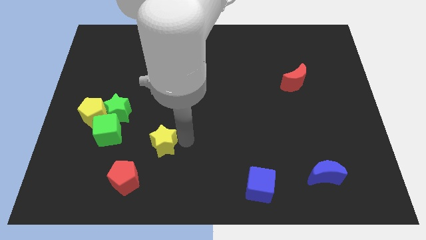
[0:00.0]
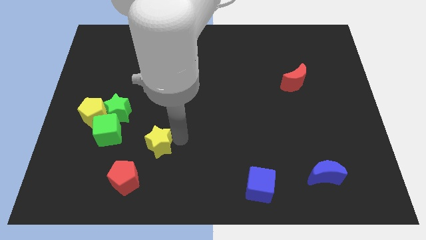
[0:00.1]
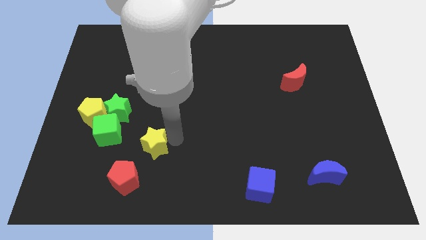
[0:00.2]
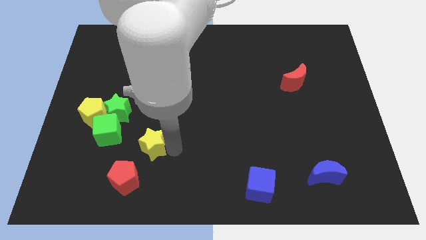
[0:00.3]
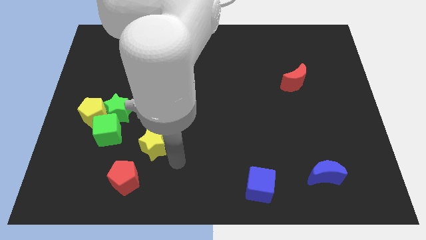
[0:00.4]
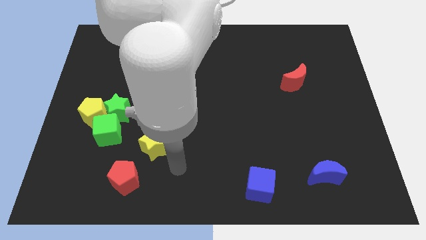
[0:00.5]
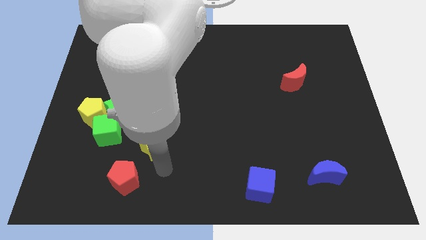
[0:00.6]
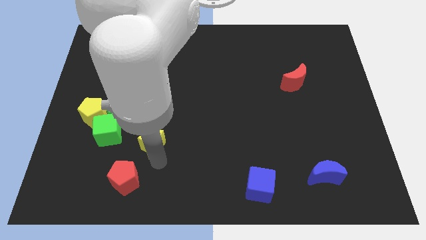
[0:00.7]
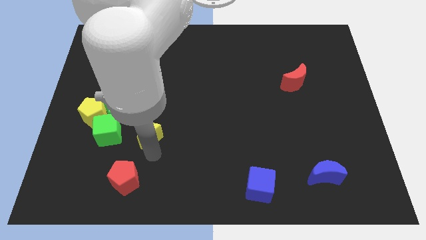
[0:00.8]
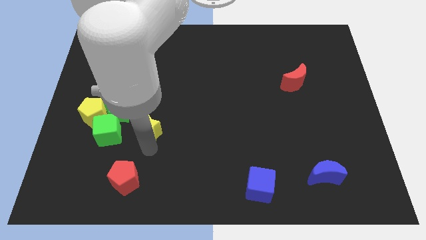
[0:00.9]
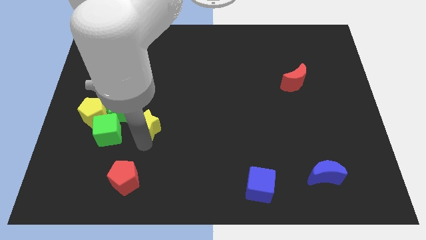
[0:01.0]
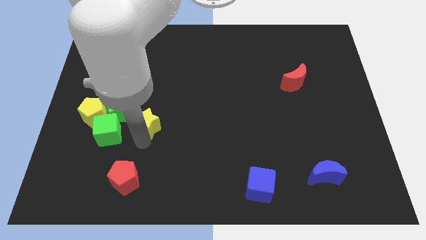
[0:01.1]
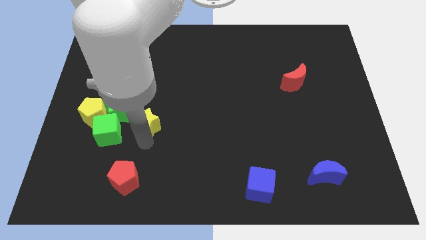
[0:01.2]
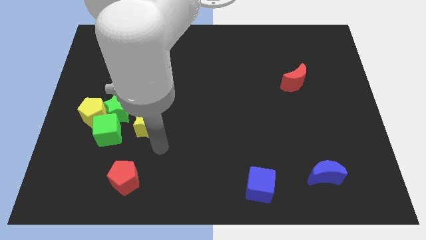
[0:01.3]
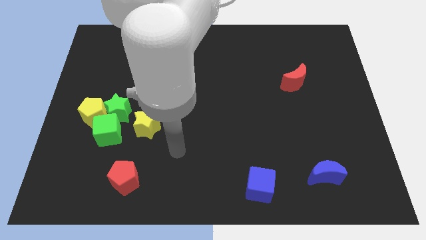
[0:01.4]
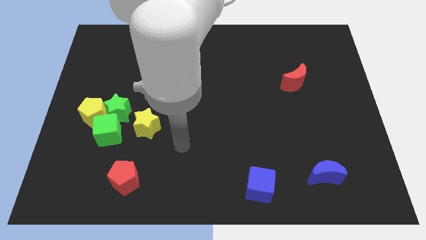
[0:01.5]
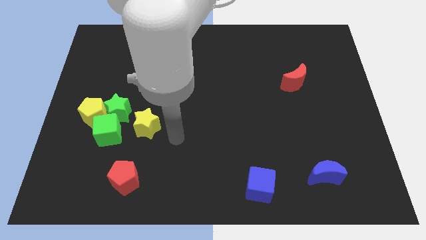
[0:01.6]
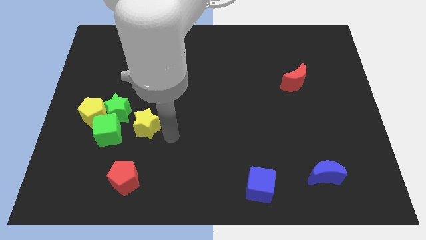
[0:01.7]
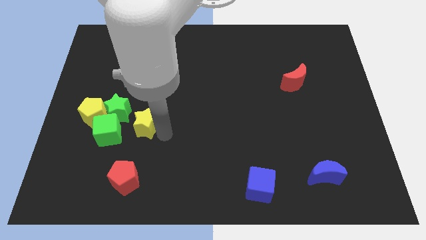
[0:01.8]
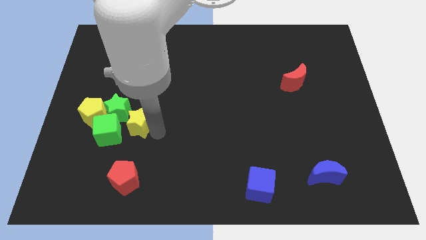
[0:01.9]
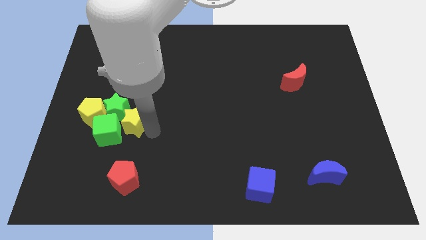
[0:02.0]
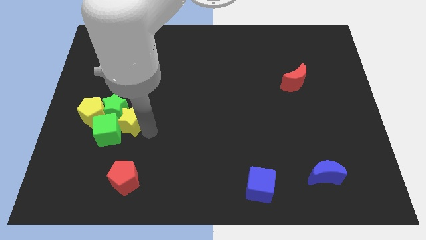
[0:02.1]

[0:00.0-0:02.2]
move the yellow star near to the green star and green cube

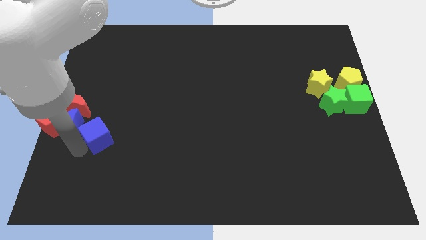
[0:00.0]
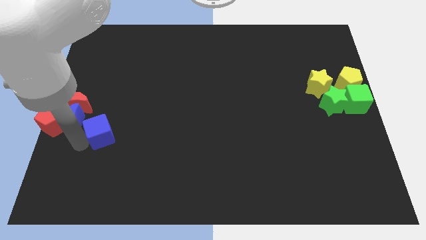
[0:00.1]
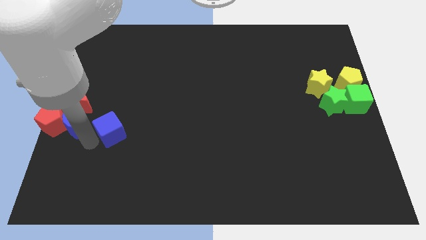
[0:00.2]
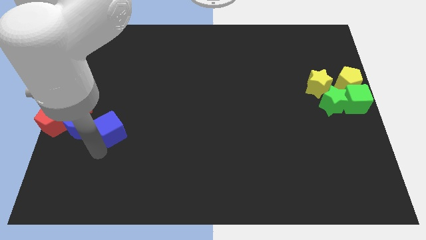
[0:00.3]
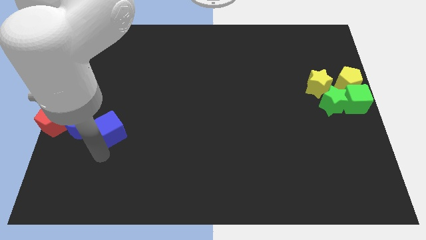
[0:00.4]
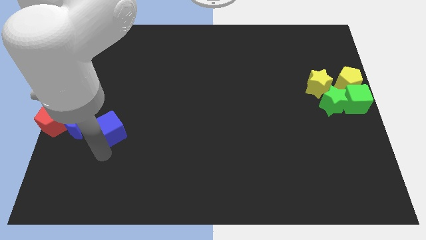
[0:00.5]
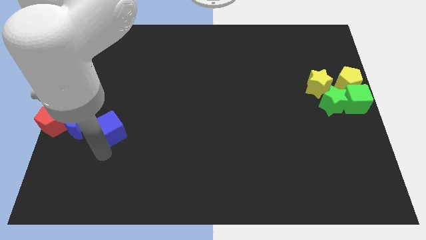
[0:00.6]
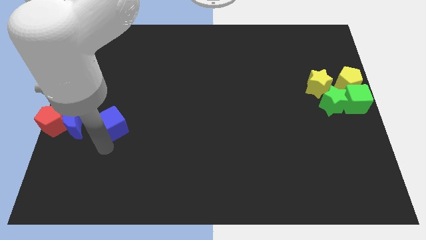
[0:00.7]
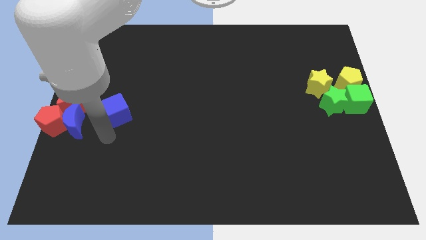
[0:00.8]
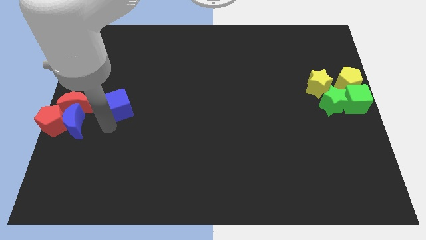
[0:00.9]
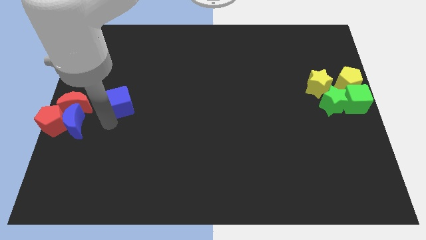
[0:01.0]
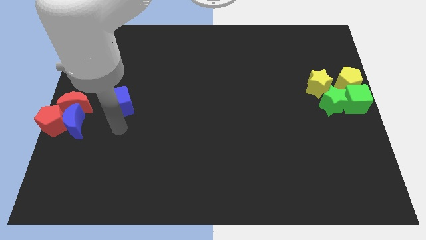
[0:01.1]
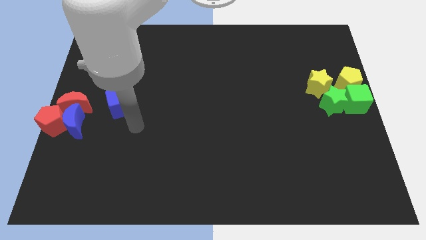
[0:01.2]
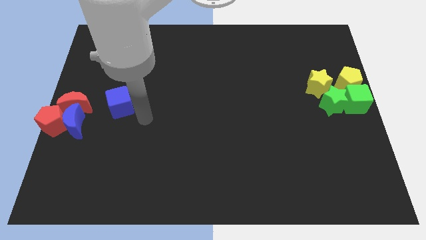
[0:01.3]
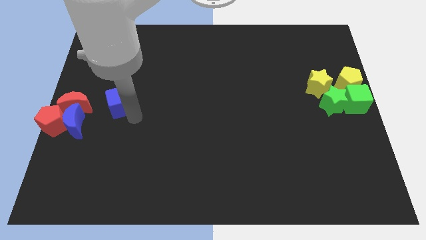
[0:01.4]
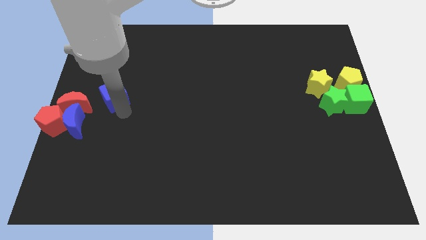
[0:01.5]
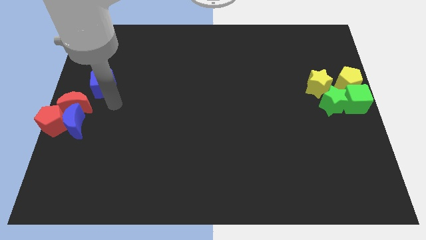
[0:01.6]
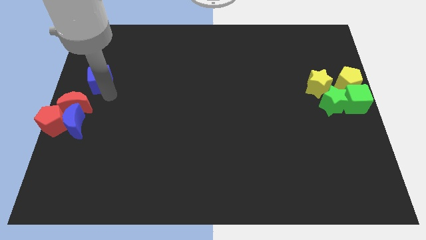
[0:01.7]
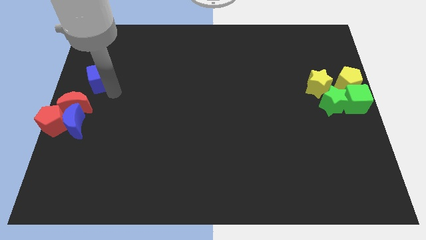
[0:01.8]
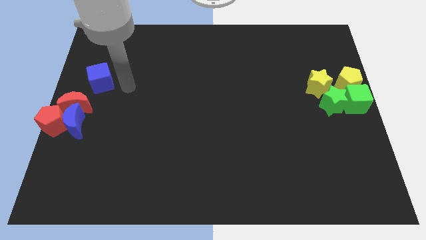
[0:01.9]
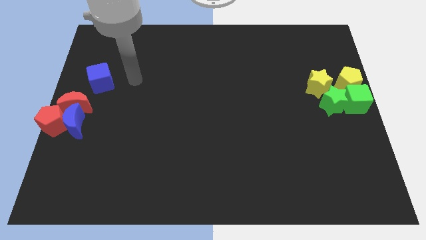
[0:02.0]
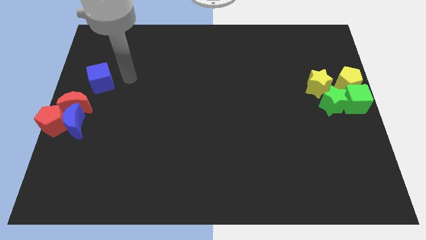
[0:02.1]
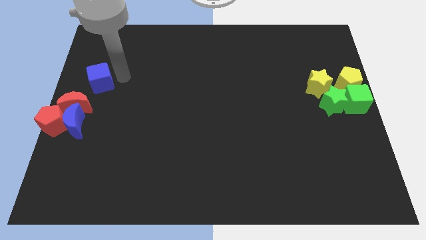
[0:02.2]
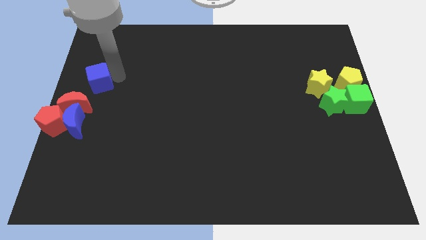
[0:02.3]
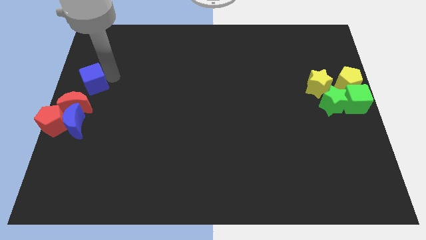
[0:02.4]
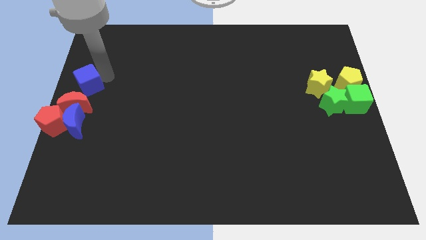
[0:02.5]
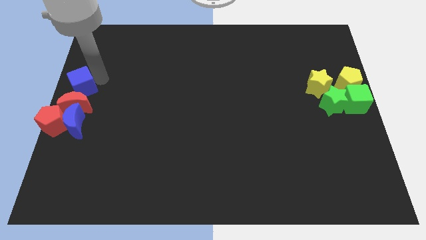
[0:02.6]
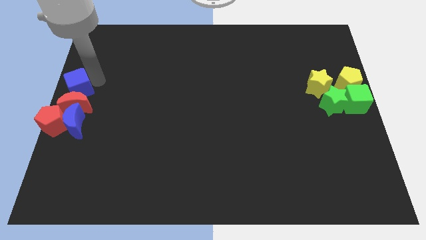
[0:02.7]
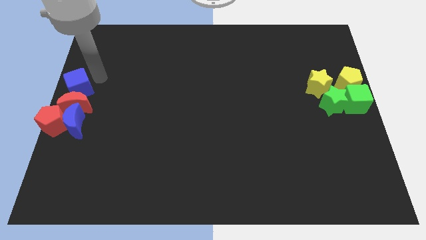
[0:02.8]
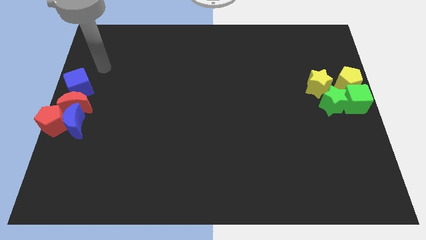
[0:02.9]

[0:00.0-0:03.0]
put the blue cube at the top of red moon

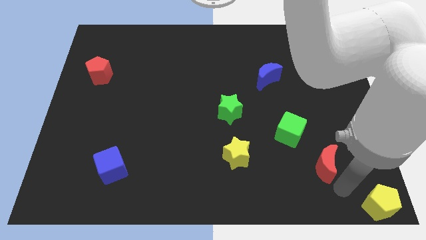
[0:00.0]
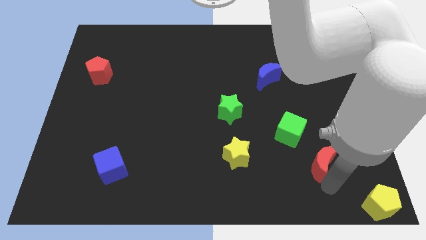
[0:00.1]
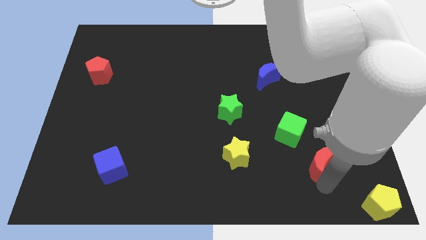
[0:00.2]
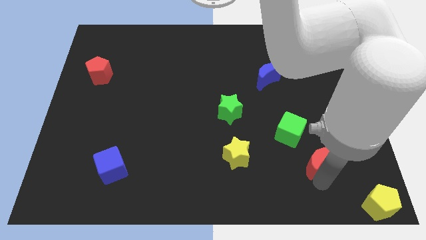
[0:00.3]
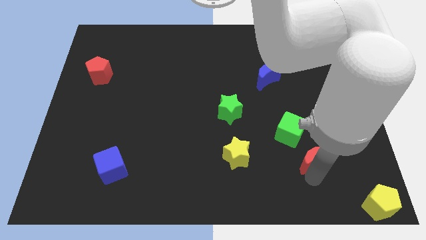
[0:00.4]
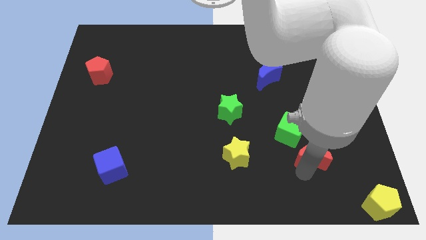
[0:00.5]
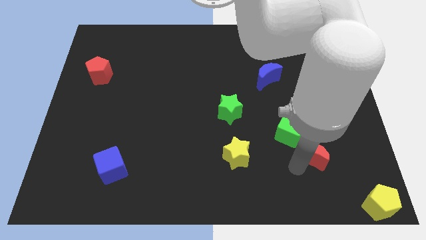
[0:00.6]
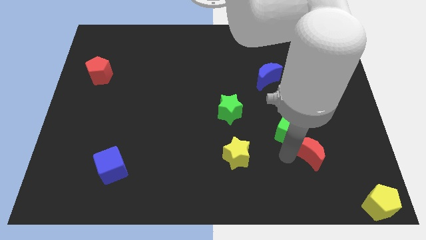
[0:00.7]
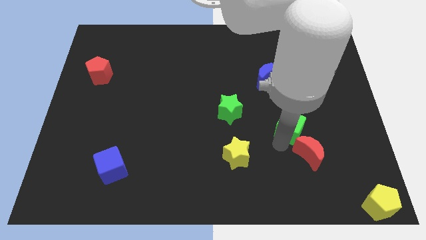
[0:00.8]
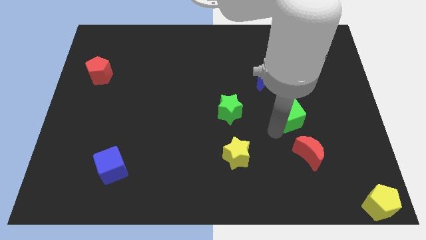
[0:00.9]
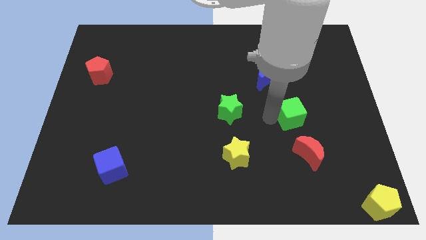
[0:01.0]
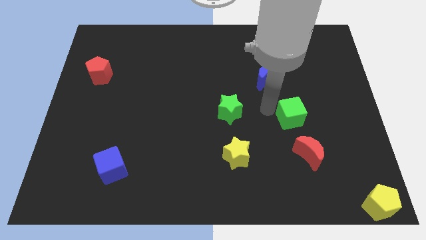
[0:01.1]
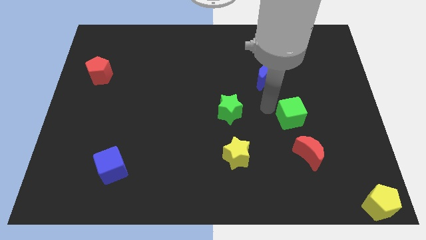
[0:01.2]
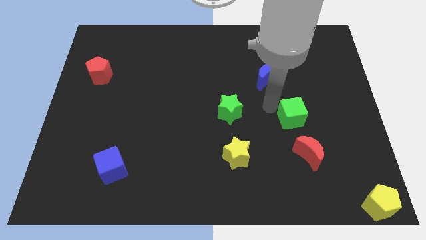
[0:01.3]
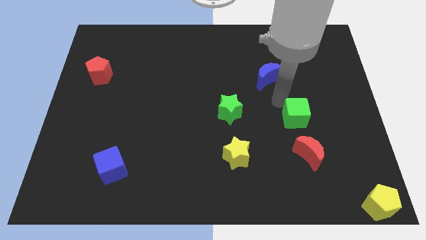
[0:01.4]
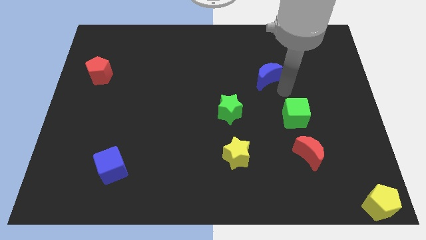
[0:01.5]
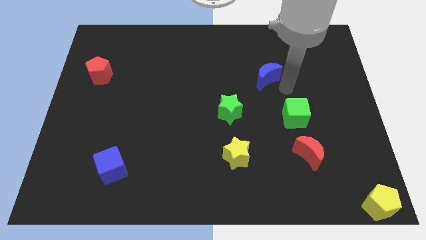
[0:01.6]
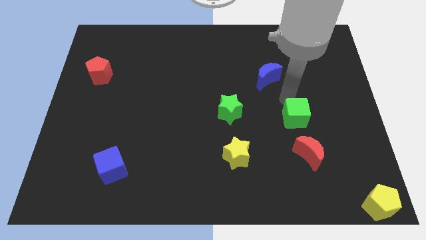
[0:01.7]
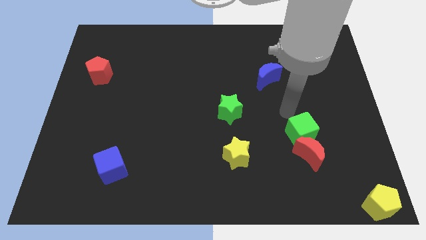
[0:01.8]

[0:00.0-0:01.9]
place the green cube to the right side of the green star

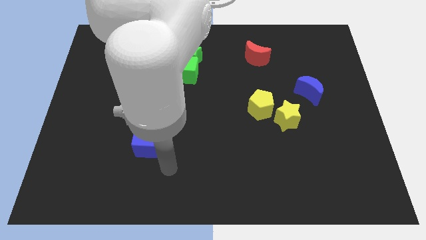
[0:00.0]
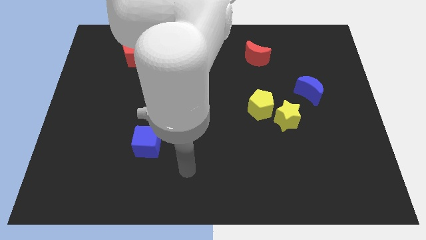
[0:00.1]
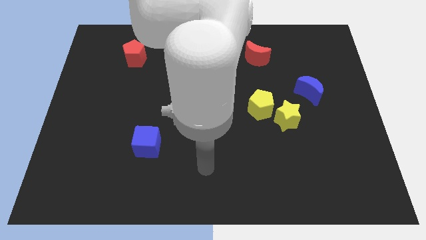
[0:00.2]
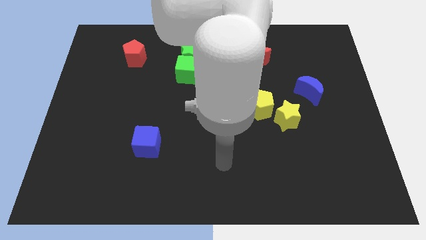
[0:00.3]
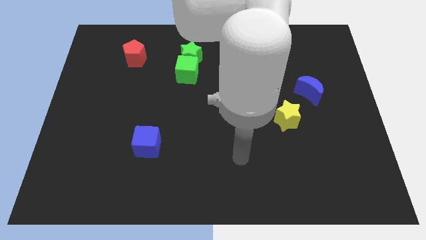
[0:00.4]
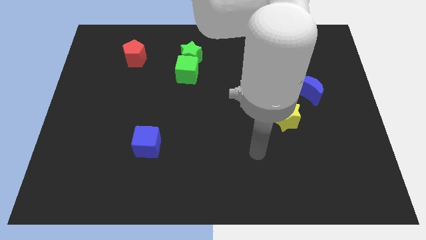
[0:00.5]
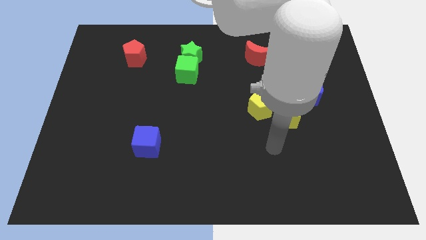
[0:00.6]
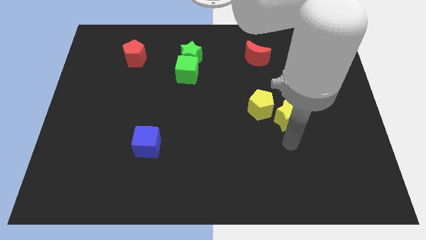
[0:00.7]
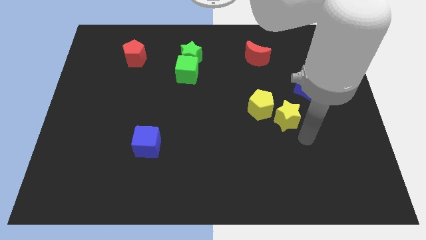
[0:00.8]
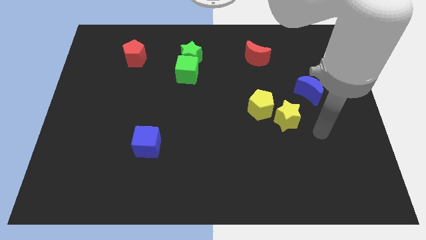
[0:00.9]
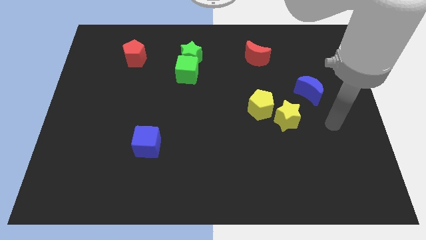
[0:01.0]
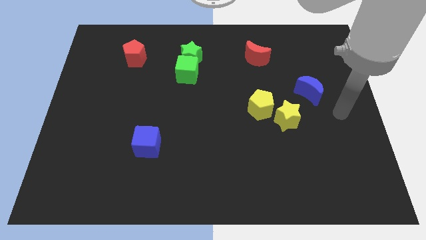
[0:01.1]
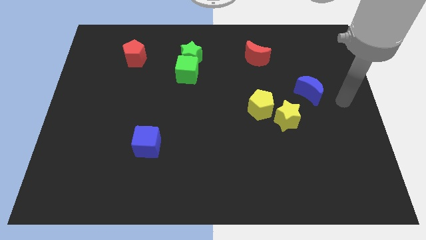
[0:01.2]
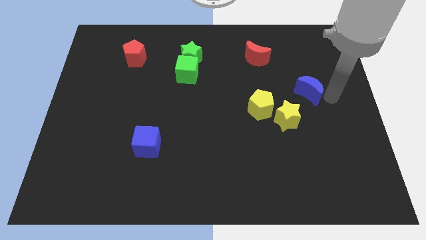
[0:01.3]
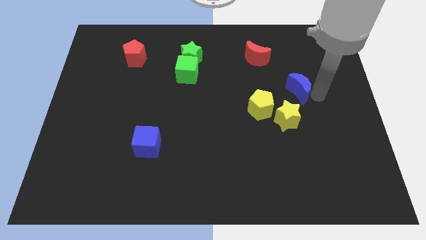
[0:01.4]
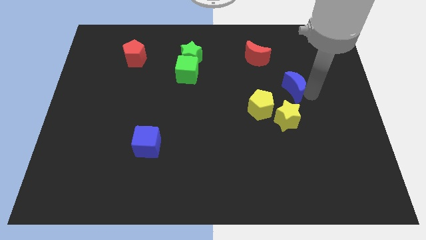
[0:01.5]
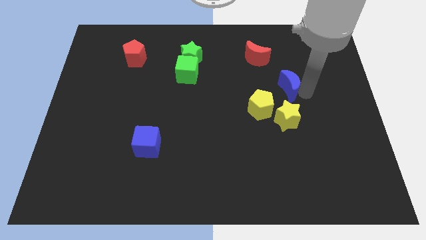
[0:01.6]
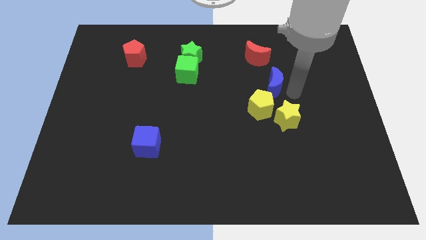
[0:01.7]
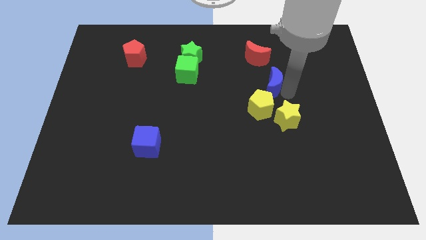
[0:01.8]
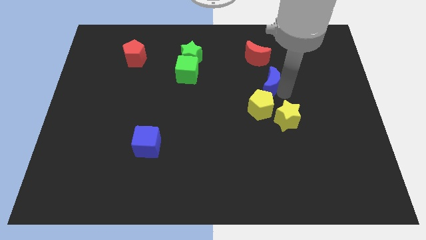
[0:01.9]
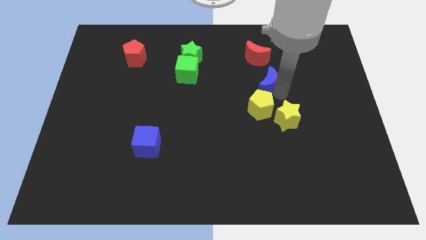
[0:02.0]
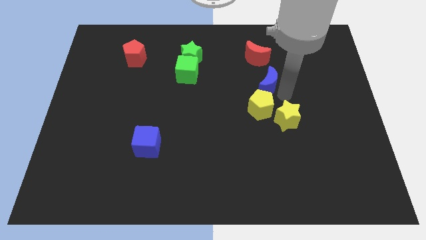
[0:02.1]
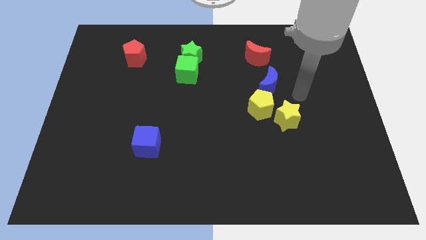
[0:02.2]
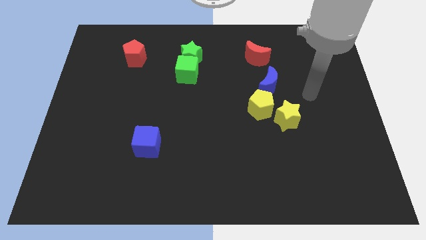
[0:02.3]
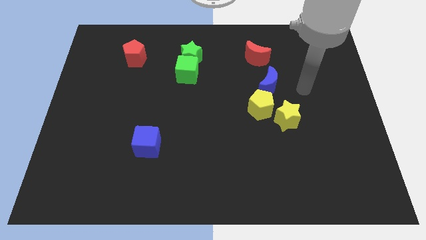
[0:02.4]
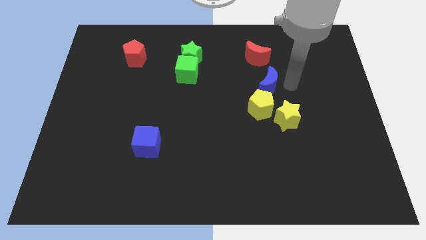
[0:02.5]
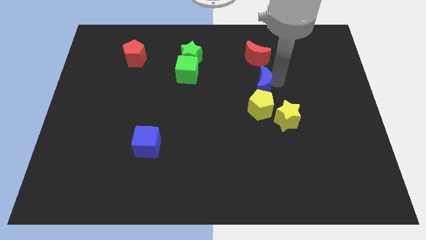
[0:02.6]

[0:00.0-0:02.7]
place the blue crescent at the top of yellow pentagon
